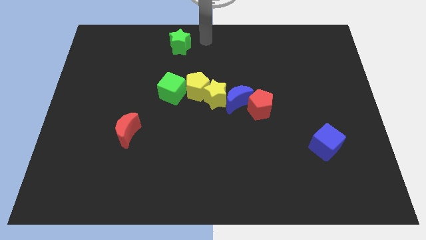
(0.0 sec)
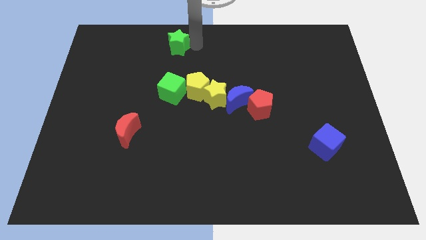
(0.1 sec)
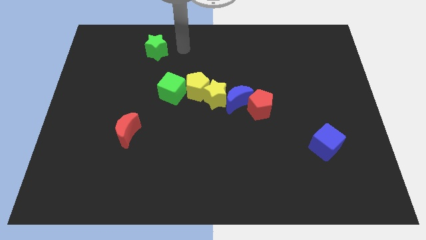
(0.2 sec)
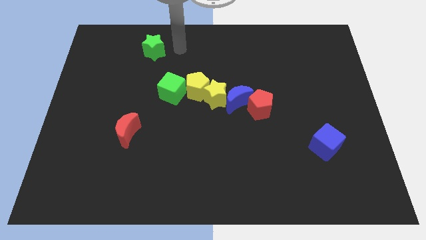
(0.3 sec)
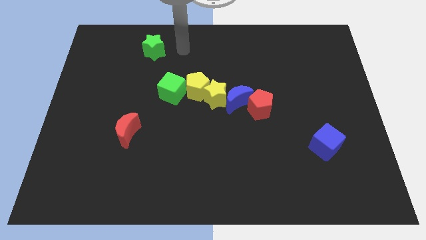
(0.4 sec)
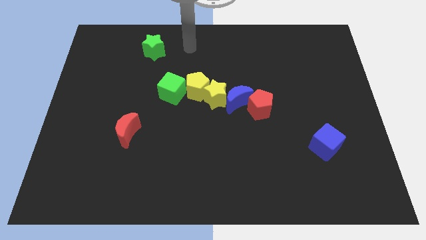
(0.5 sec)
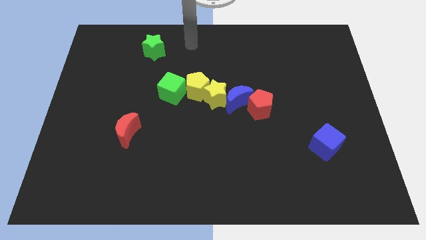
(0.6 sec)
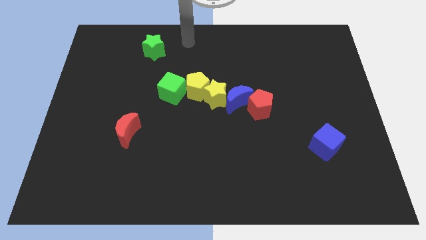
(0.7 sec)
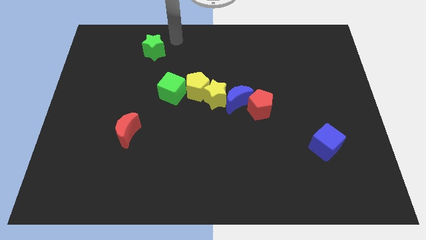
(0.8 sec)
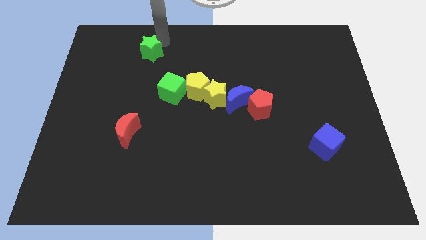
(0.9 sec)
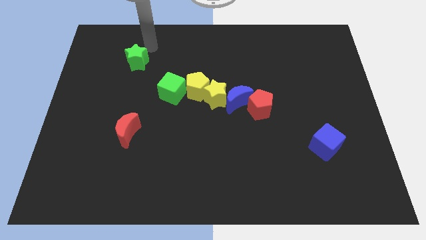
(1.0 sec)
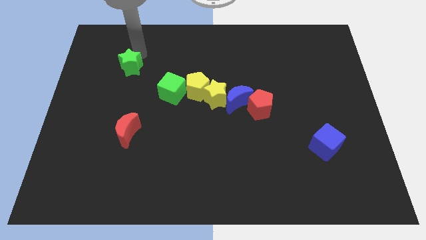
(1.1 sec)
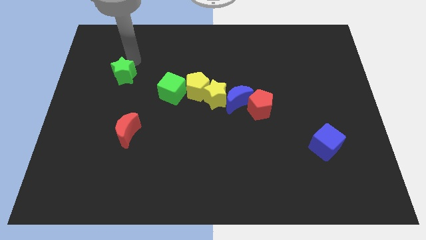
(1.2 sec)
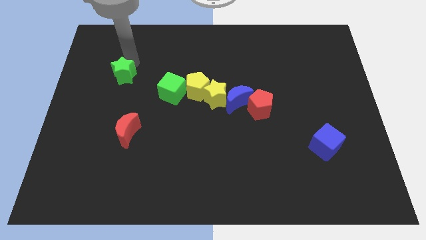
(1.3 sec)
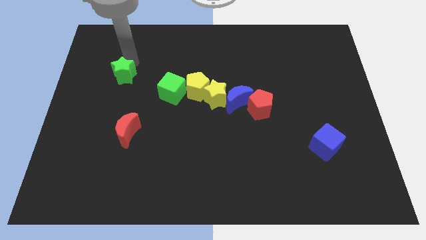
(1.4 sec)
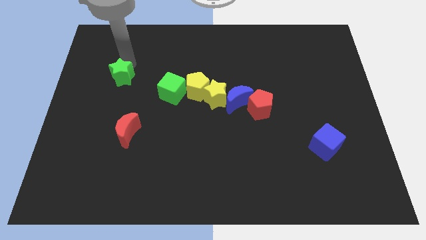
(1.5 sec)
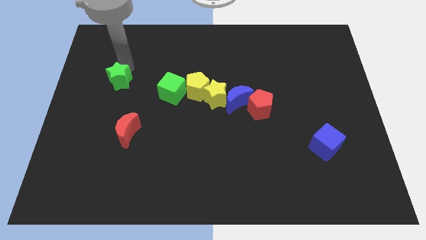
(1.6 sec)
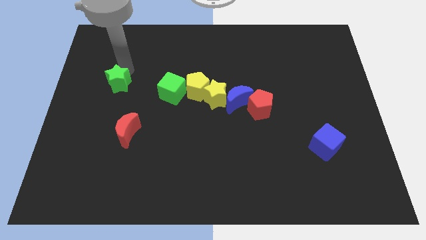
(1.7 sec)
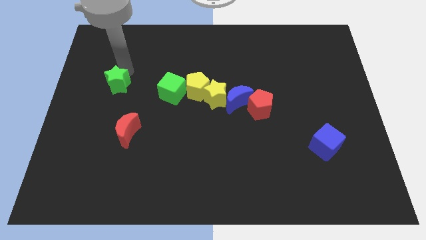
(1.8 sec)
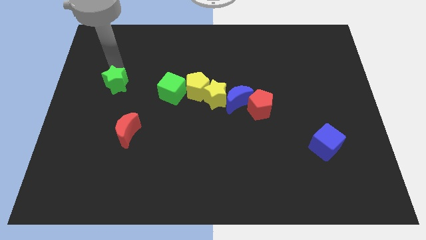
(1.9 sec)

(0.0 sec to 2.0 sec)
move the green star towards the center left side

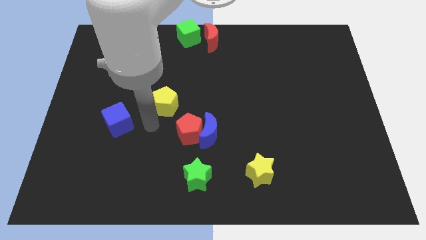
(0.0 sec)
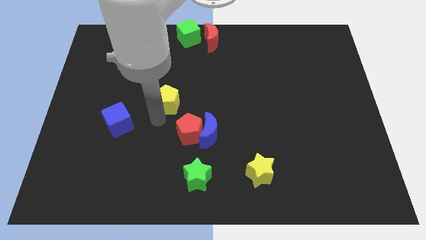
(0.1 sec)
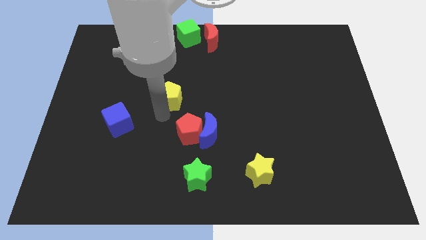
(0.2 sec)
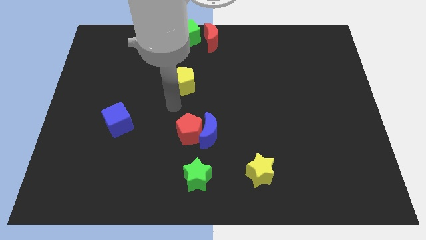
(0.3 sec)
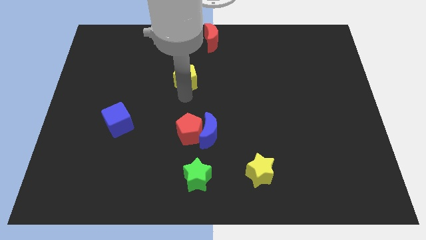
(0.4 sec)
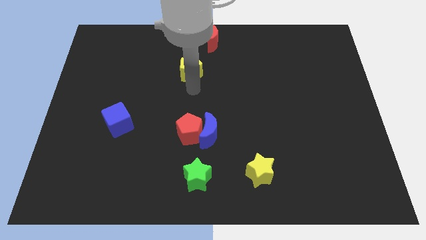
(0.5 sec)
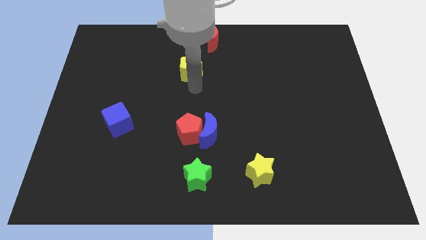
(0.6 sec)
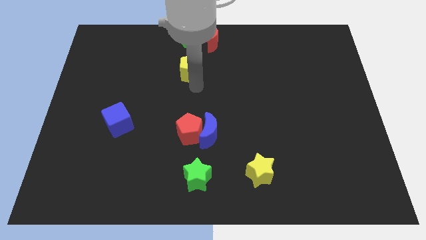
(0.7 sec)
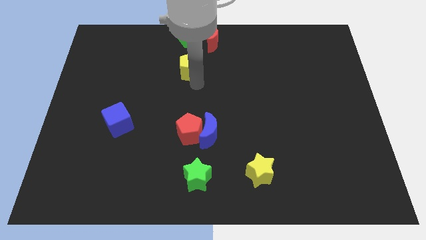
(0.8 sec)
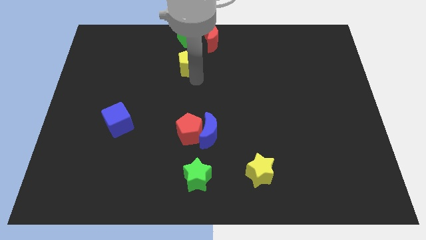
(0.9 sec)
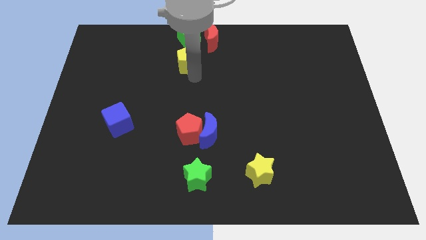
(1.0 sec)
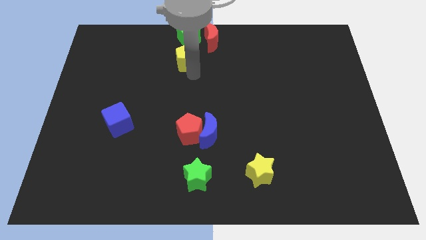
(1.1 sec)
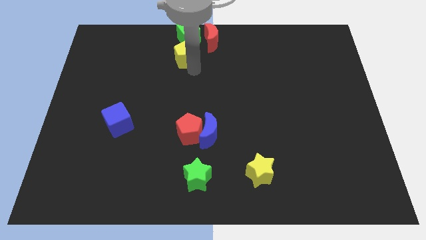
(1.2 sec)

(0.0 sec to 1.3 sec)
push the yellow pentagon towards the bottom side of the green cube

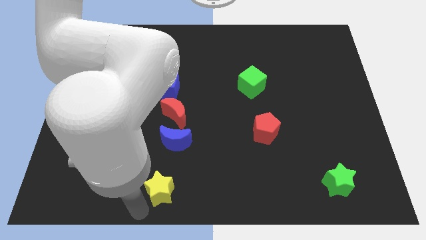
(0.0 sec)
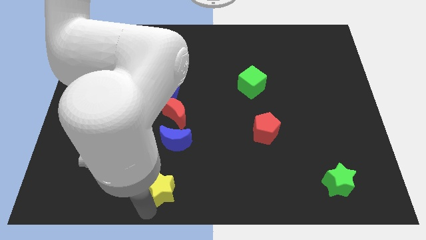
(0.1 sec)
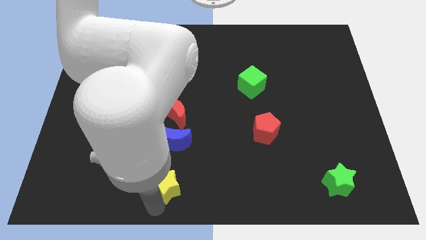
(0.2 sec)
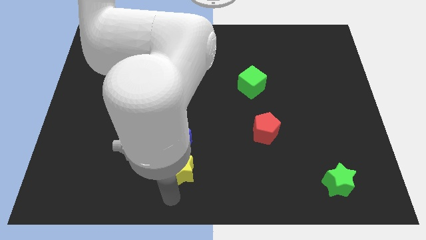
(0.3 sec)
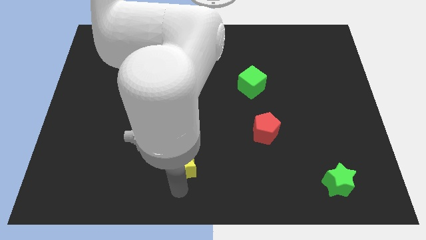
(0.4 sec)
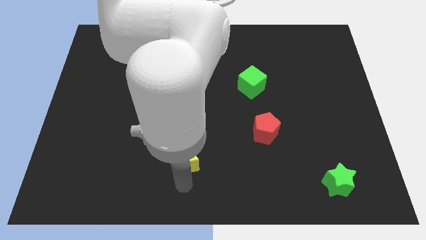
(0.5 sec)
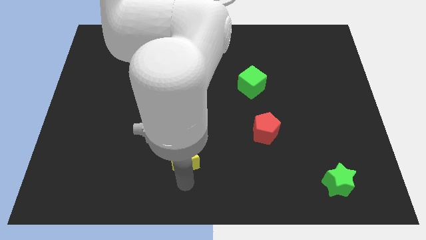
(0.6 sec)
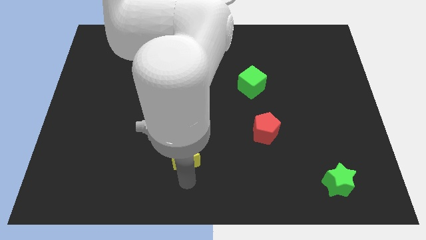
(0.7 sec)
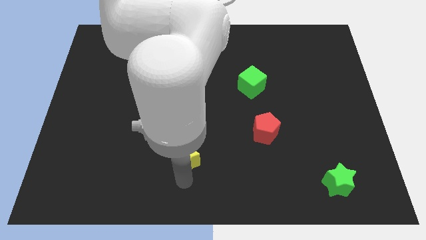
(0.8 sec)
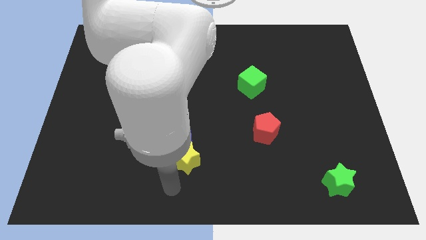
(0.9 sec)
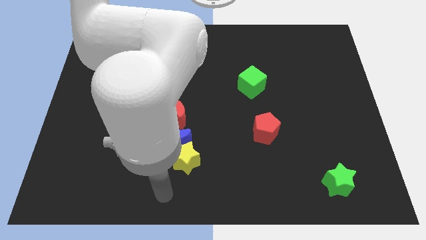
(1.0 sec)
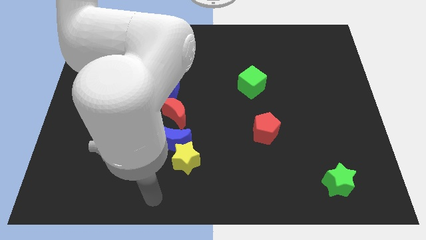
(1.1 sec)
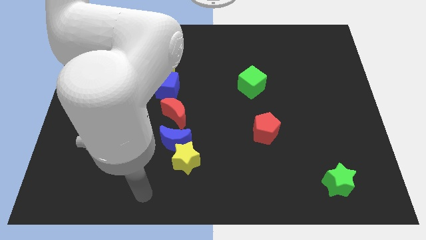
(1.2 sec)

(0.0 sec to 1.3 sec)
put the yellow star close to the bottom of the blue crescent

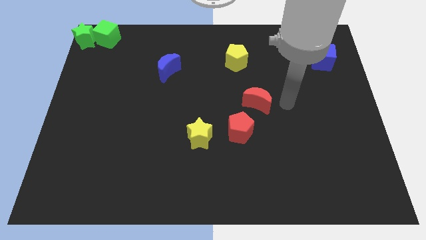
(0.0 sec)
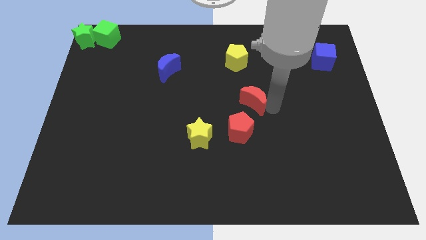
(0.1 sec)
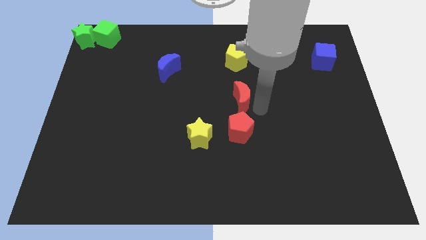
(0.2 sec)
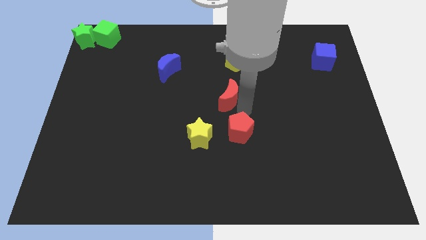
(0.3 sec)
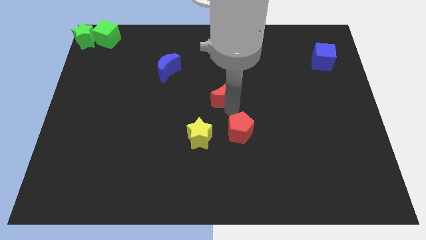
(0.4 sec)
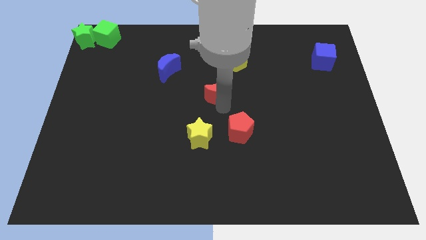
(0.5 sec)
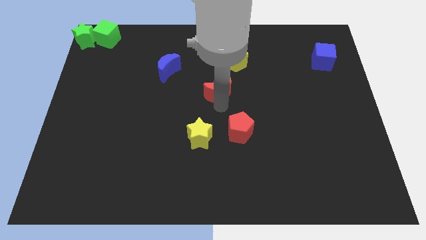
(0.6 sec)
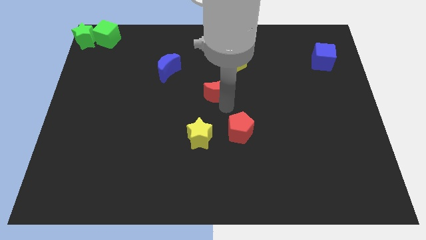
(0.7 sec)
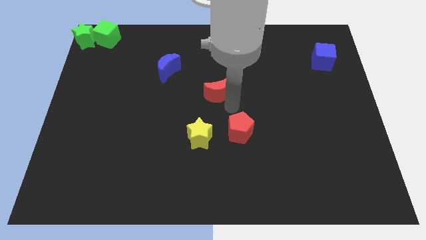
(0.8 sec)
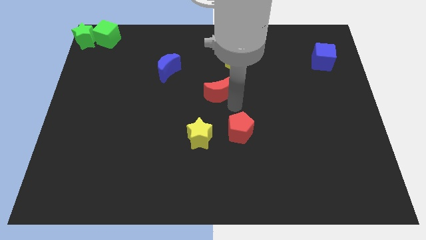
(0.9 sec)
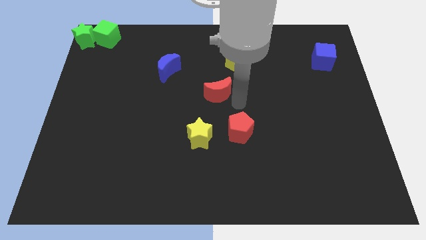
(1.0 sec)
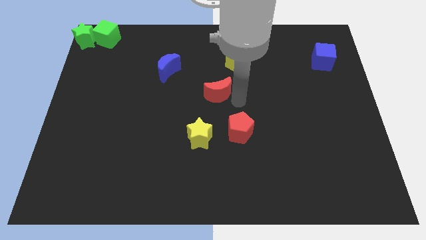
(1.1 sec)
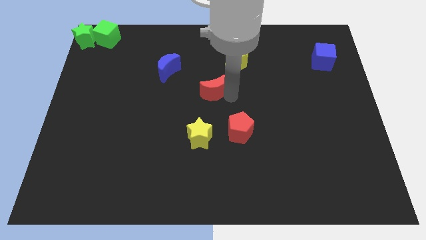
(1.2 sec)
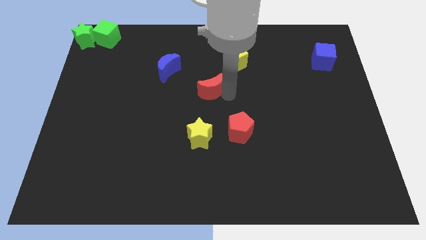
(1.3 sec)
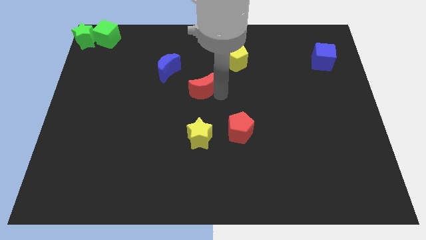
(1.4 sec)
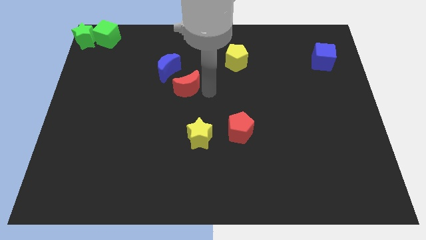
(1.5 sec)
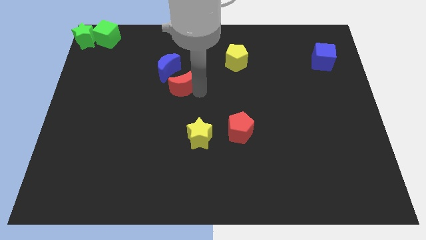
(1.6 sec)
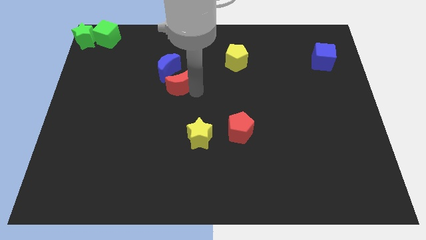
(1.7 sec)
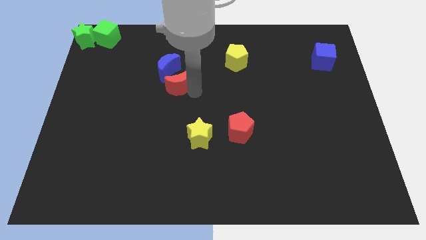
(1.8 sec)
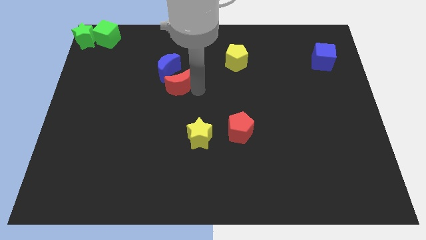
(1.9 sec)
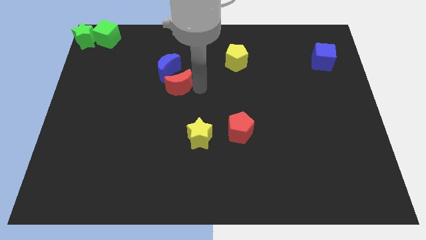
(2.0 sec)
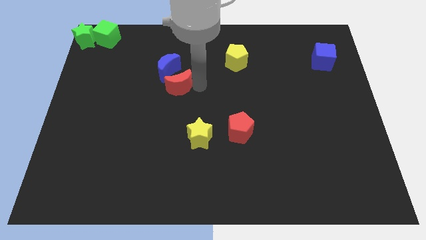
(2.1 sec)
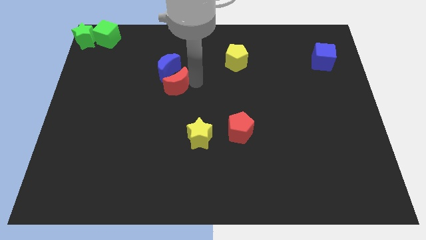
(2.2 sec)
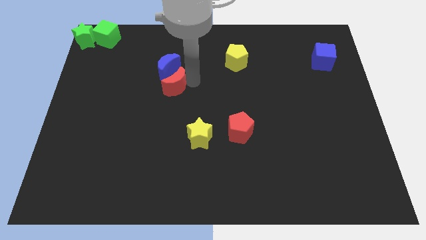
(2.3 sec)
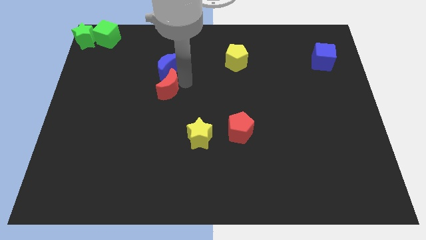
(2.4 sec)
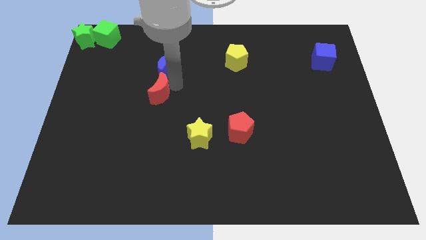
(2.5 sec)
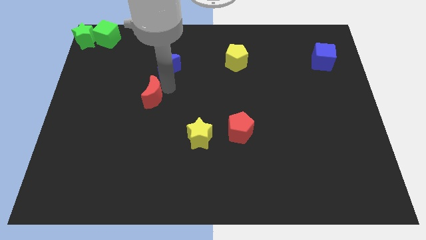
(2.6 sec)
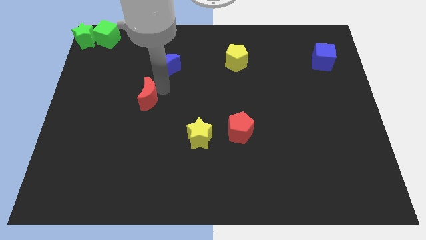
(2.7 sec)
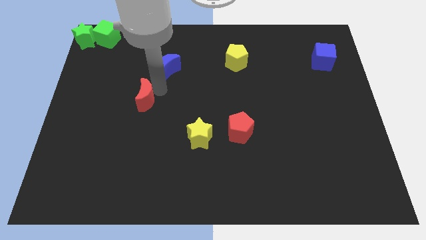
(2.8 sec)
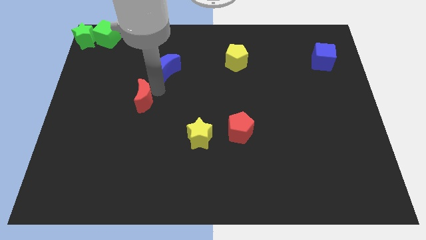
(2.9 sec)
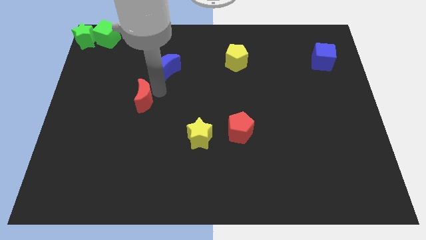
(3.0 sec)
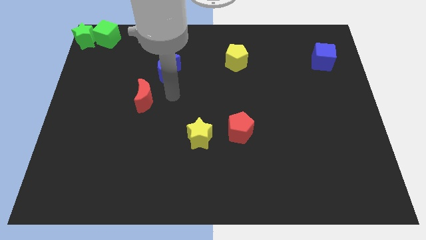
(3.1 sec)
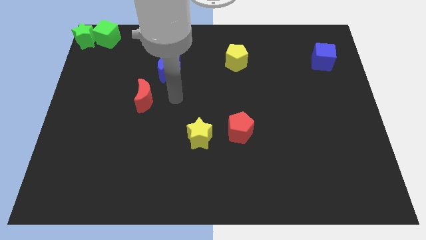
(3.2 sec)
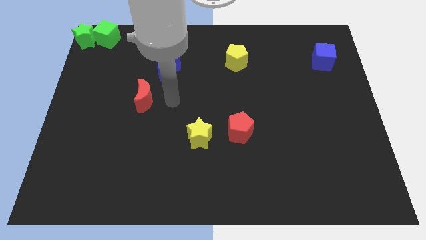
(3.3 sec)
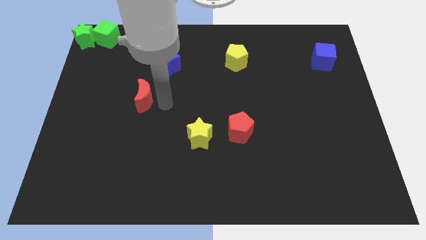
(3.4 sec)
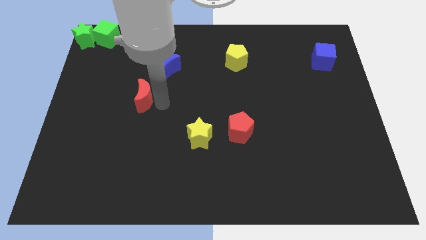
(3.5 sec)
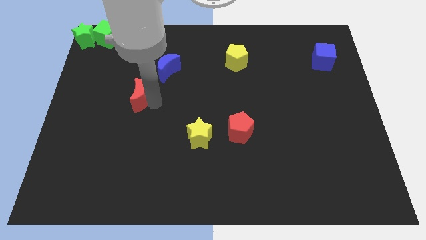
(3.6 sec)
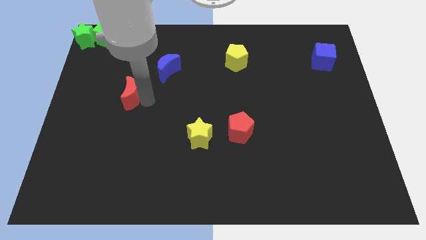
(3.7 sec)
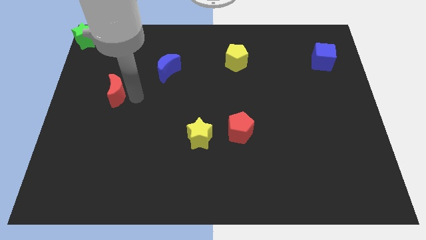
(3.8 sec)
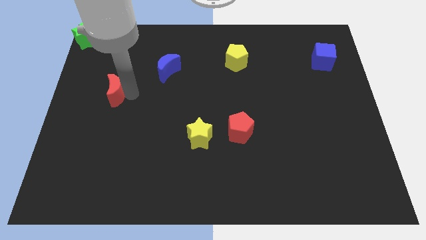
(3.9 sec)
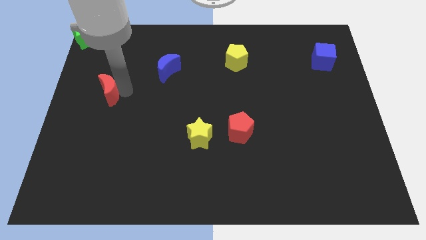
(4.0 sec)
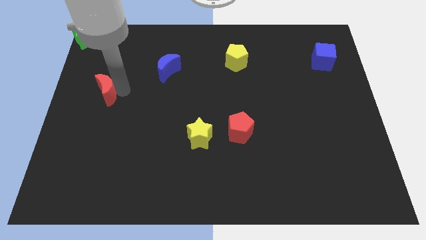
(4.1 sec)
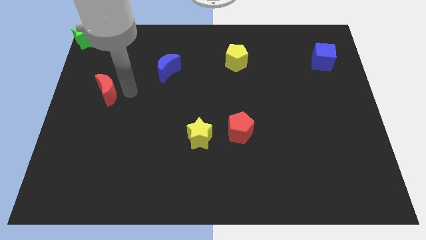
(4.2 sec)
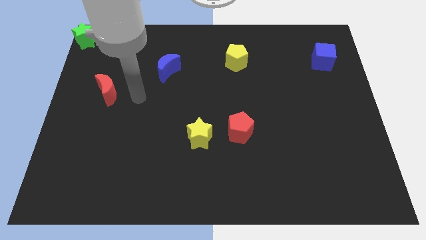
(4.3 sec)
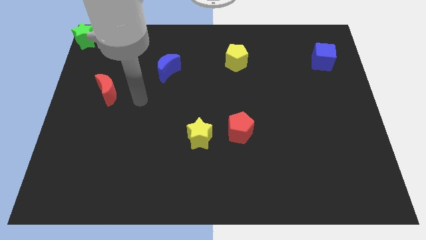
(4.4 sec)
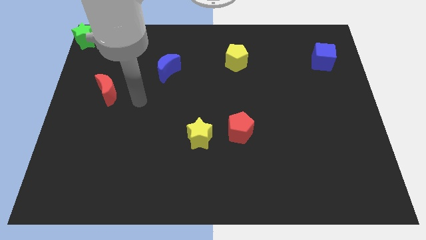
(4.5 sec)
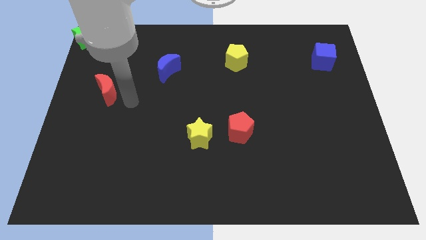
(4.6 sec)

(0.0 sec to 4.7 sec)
place red moon to the bottom of green cube
